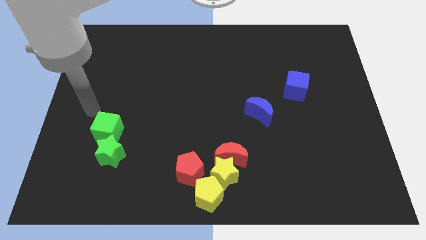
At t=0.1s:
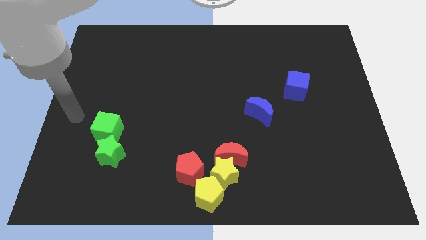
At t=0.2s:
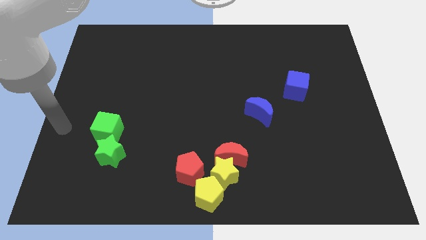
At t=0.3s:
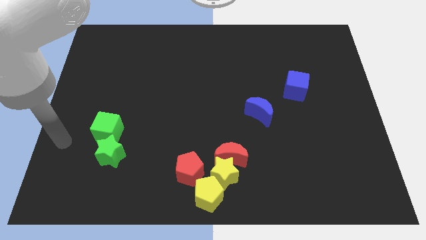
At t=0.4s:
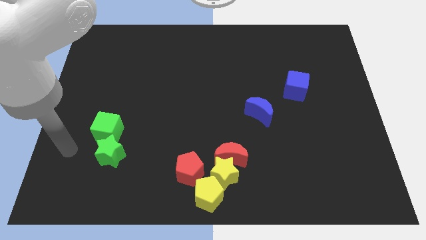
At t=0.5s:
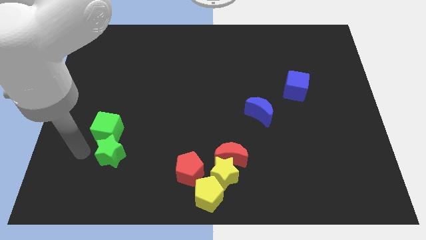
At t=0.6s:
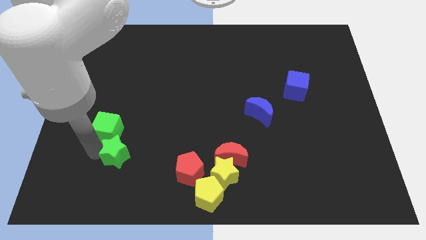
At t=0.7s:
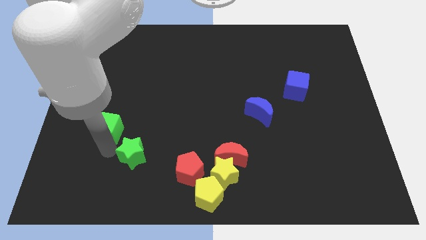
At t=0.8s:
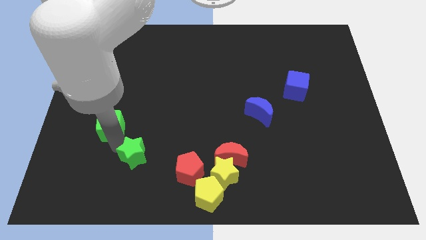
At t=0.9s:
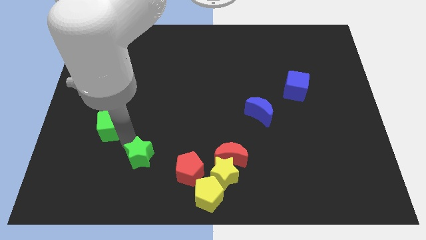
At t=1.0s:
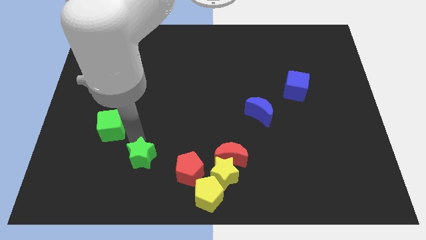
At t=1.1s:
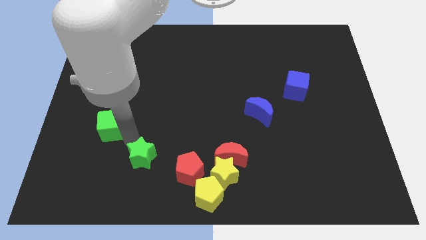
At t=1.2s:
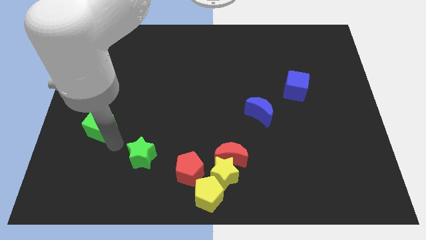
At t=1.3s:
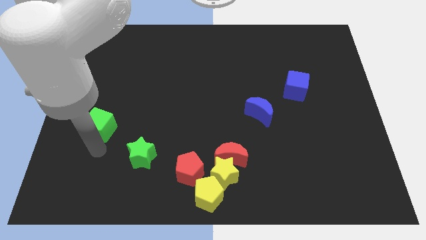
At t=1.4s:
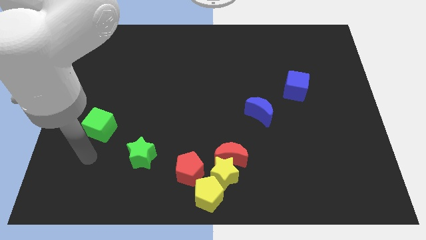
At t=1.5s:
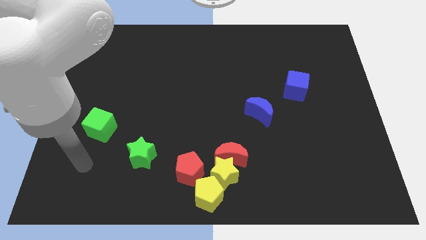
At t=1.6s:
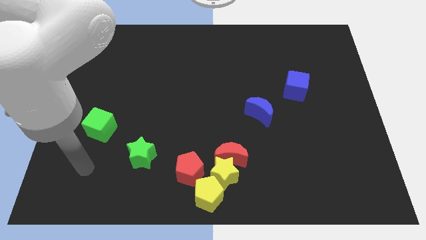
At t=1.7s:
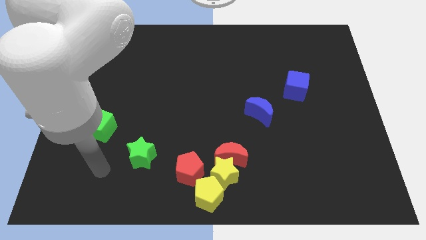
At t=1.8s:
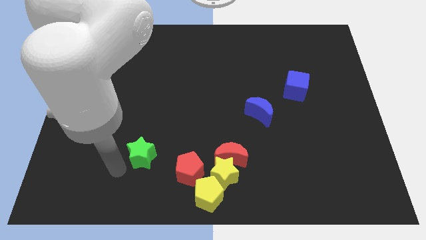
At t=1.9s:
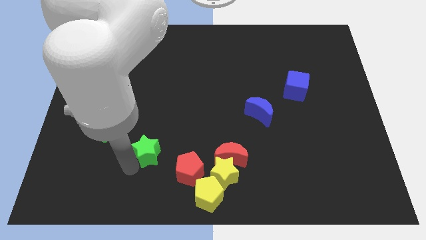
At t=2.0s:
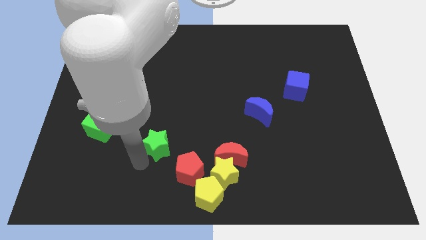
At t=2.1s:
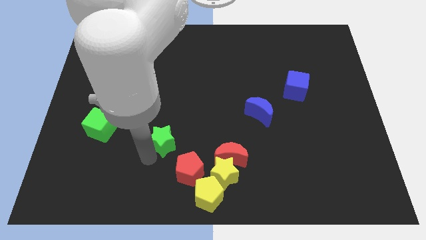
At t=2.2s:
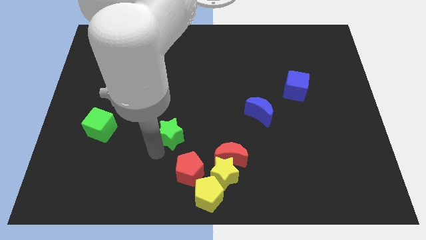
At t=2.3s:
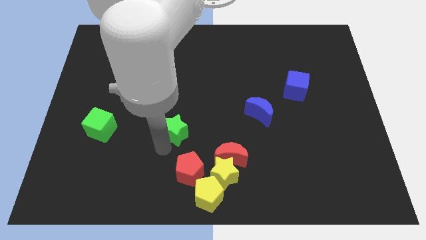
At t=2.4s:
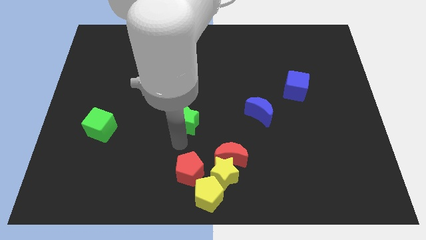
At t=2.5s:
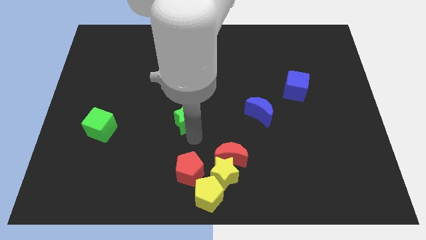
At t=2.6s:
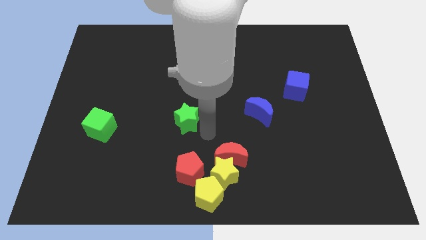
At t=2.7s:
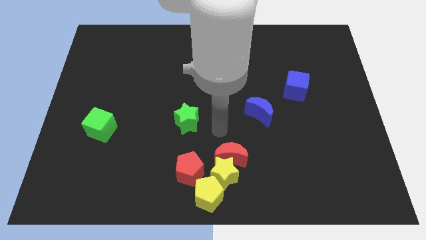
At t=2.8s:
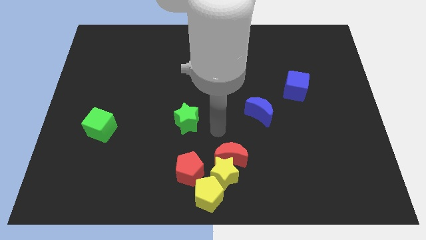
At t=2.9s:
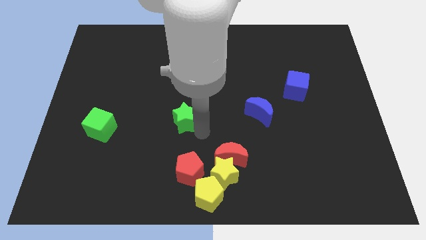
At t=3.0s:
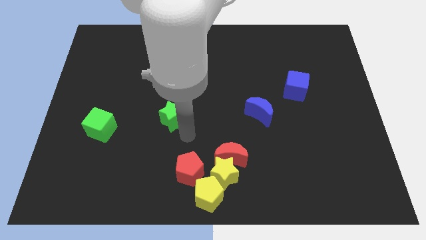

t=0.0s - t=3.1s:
separate the green star from green cube

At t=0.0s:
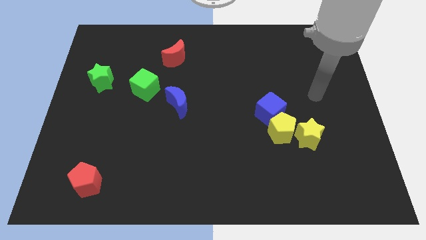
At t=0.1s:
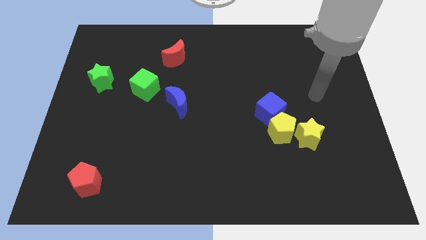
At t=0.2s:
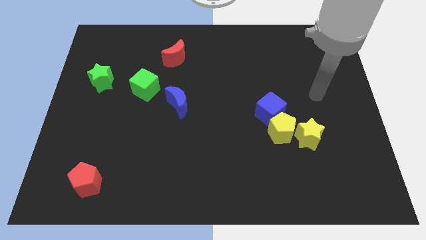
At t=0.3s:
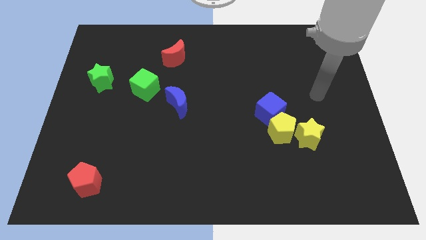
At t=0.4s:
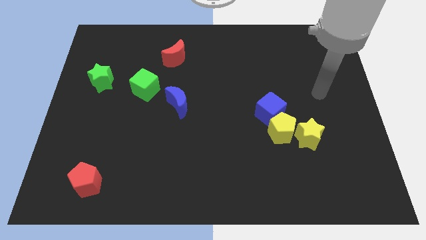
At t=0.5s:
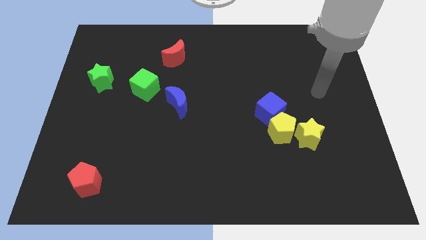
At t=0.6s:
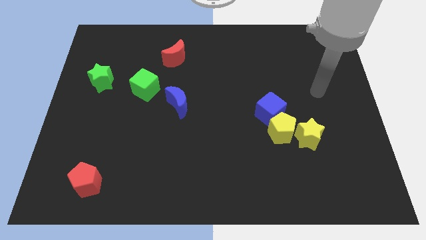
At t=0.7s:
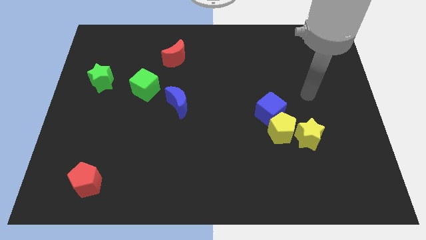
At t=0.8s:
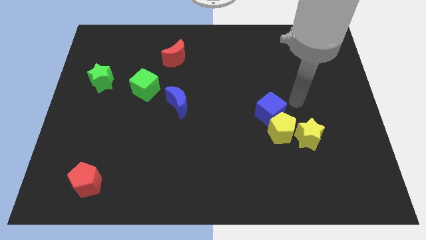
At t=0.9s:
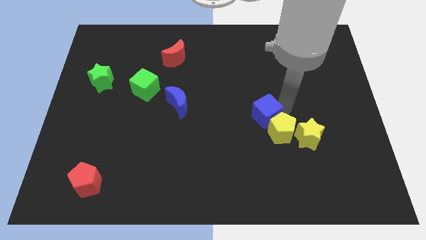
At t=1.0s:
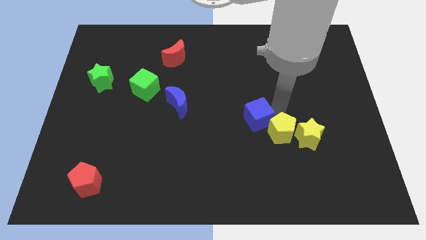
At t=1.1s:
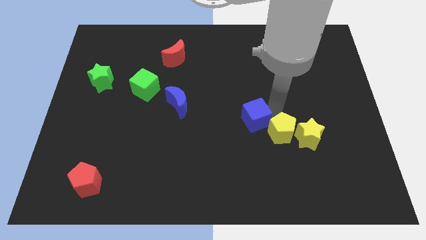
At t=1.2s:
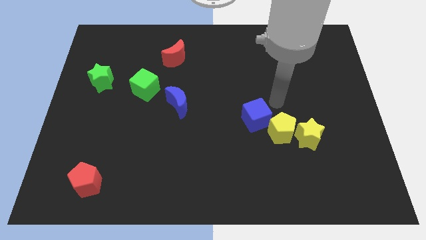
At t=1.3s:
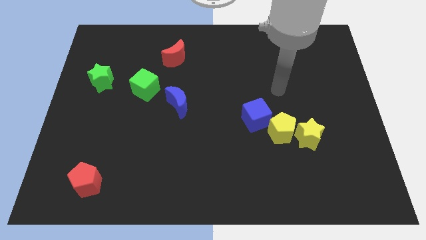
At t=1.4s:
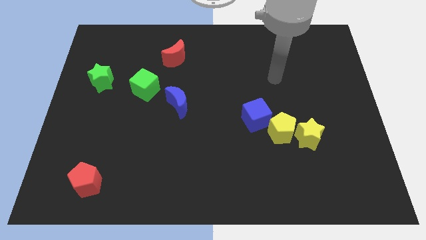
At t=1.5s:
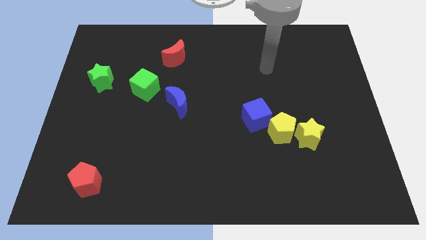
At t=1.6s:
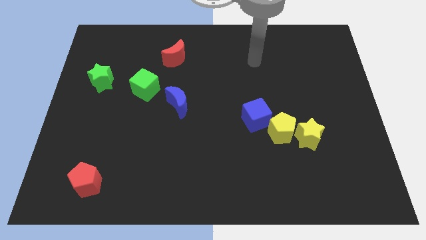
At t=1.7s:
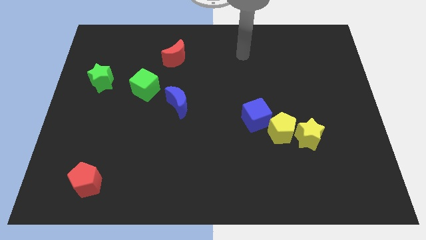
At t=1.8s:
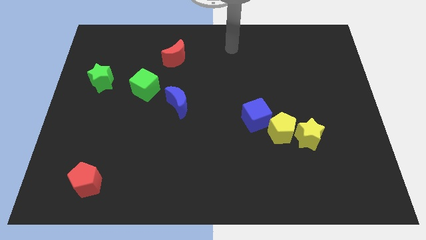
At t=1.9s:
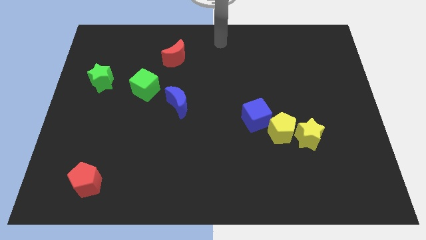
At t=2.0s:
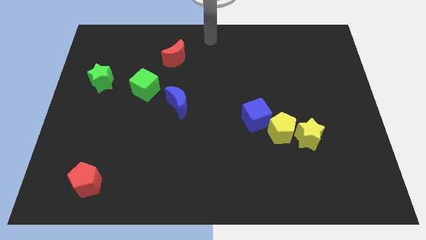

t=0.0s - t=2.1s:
move the blue cube slightly

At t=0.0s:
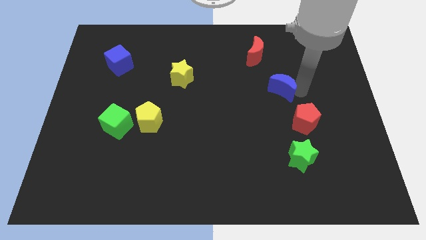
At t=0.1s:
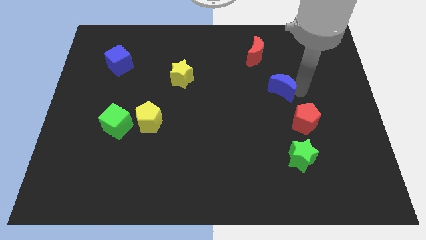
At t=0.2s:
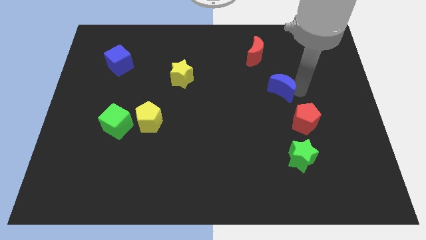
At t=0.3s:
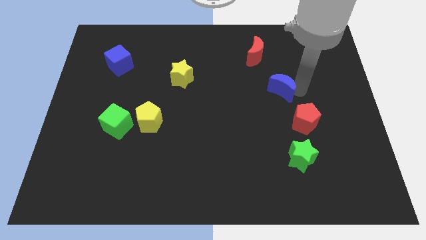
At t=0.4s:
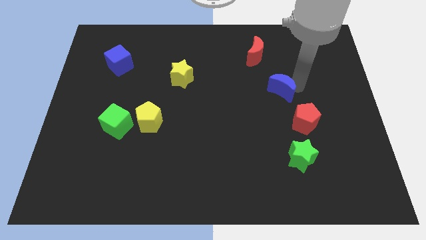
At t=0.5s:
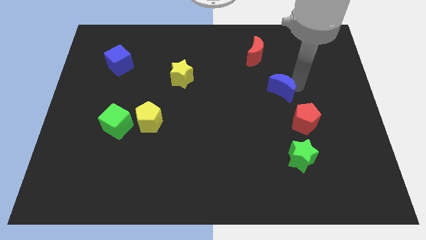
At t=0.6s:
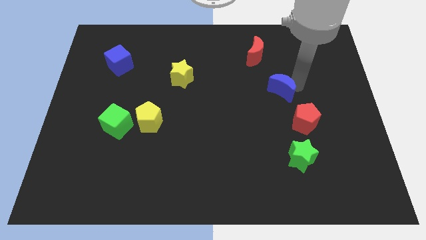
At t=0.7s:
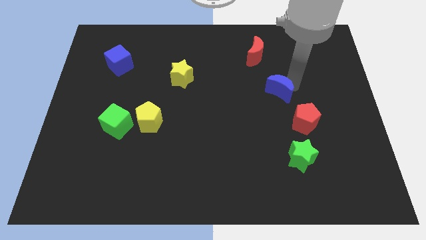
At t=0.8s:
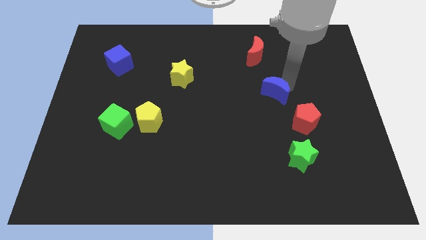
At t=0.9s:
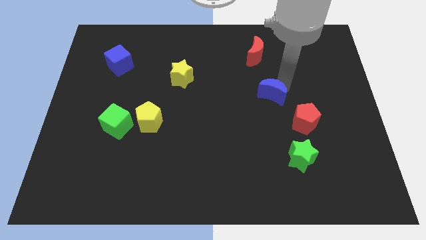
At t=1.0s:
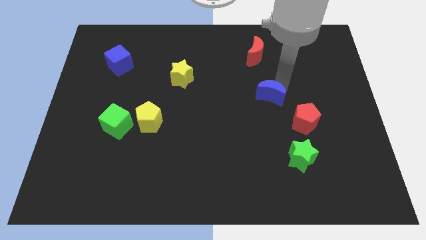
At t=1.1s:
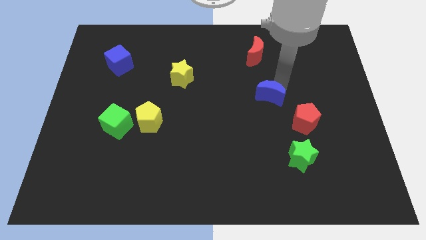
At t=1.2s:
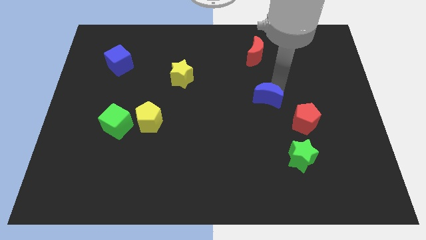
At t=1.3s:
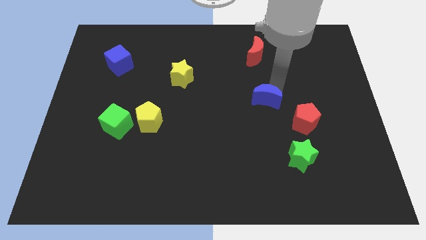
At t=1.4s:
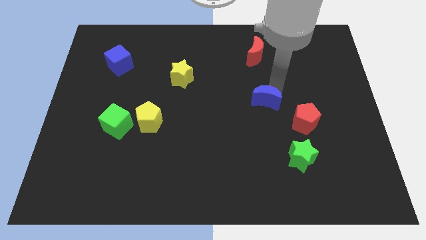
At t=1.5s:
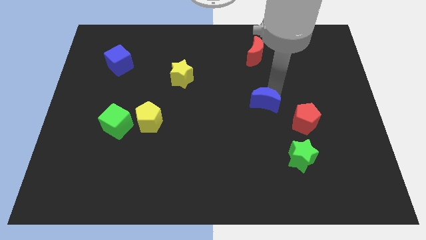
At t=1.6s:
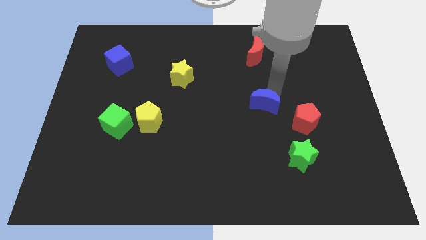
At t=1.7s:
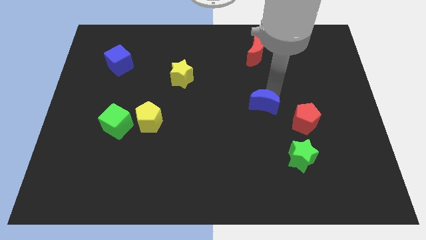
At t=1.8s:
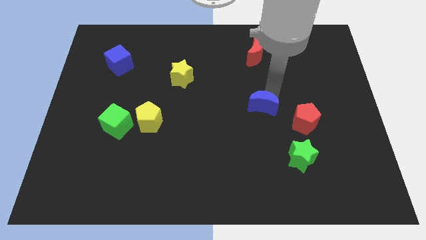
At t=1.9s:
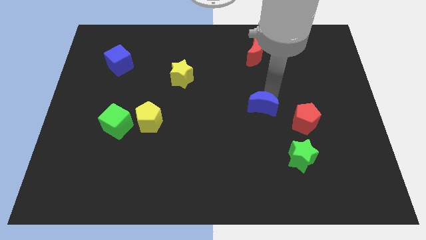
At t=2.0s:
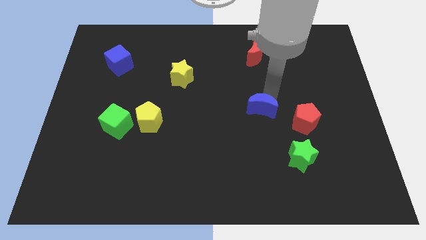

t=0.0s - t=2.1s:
slide blue moon to the left of red pentagon

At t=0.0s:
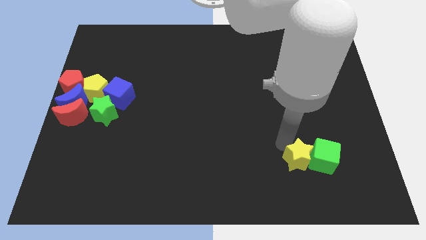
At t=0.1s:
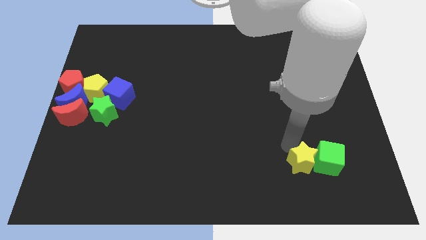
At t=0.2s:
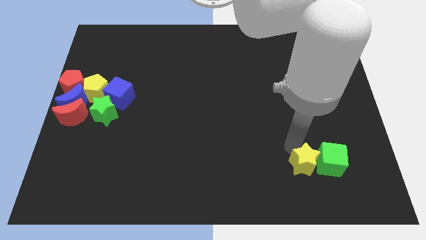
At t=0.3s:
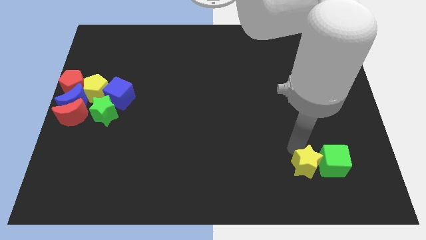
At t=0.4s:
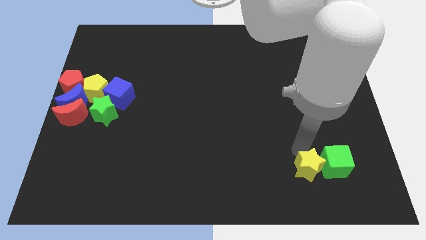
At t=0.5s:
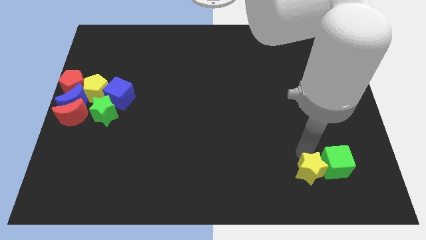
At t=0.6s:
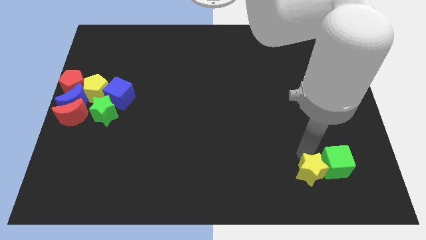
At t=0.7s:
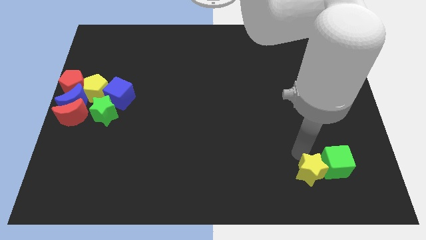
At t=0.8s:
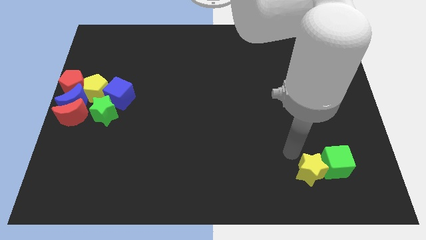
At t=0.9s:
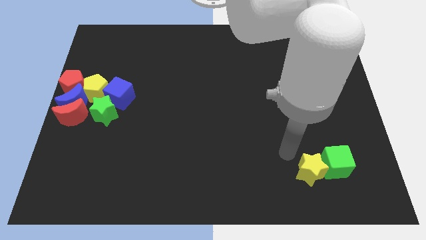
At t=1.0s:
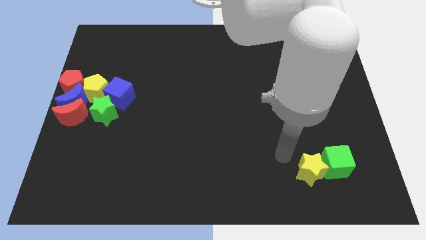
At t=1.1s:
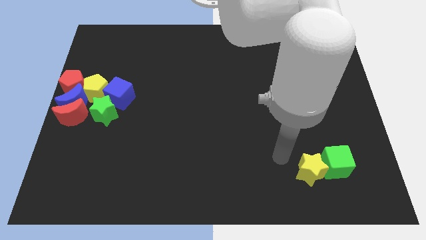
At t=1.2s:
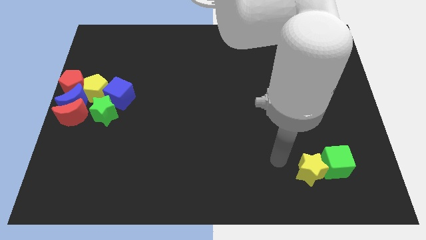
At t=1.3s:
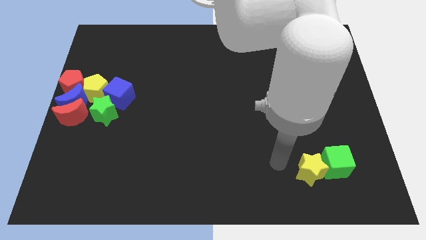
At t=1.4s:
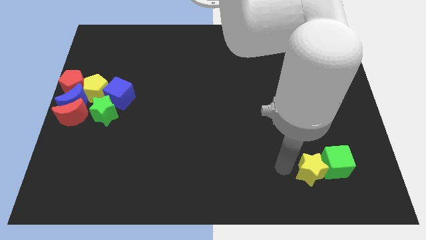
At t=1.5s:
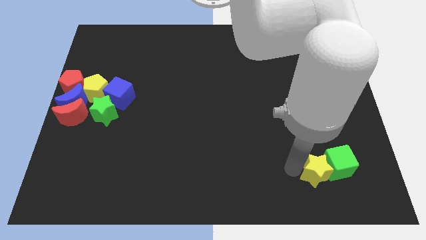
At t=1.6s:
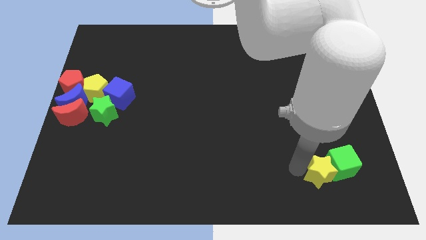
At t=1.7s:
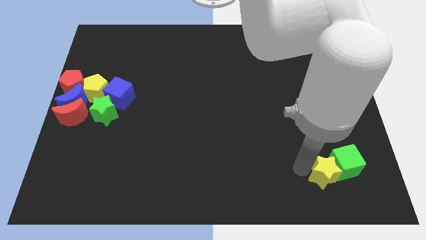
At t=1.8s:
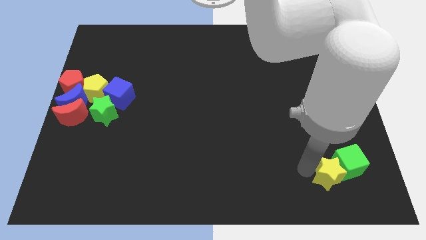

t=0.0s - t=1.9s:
move the yellow star along with the green cube slightly to the right
